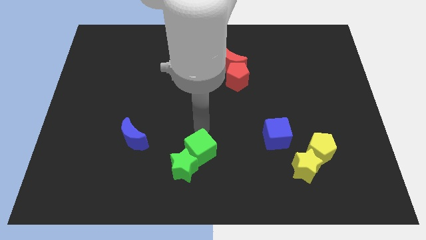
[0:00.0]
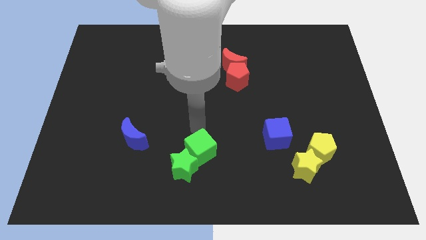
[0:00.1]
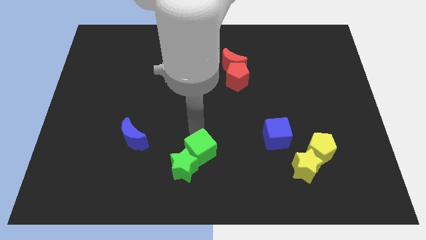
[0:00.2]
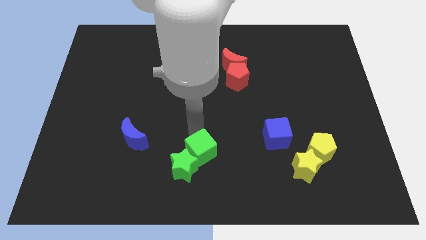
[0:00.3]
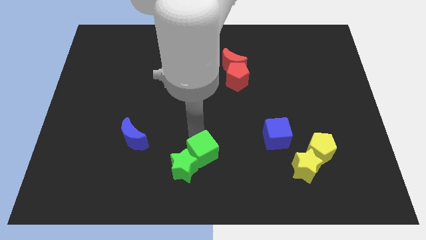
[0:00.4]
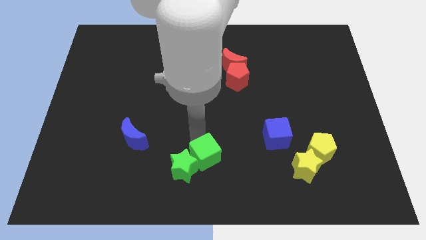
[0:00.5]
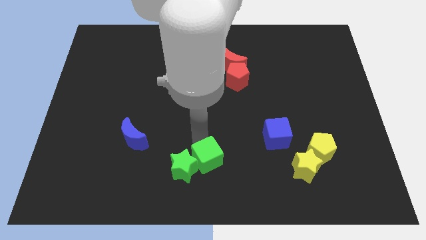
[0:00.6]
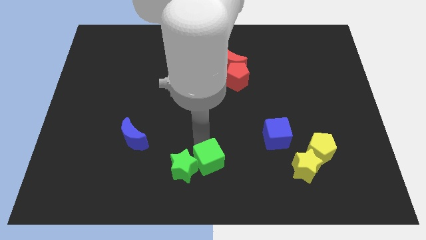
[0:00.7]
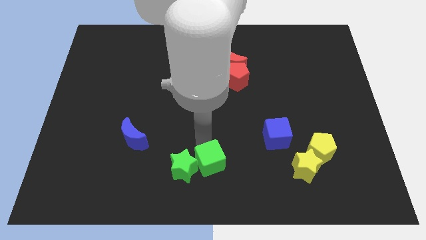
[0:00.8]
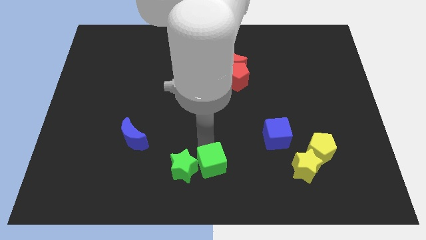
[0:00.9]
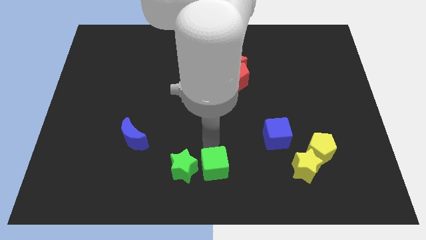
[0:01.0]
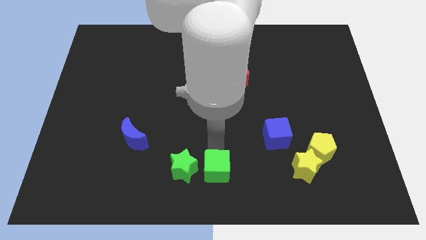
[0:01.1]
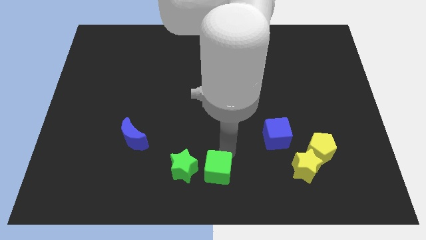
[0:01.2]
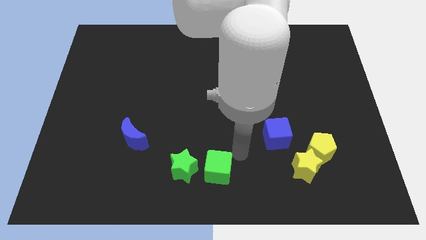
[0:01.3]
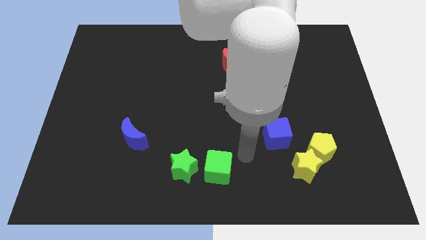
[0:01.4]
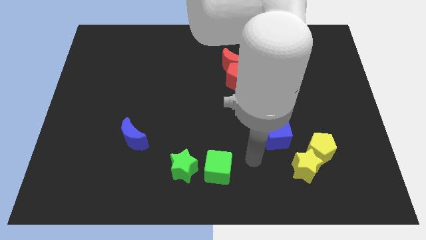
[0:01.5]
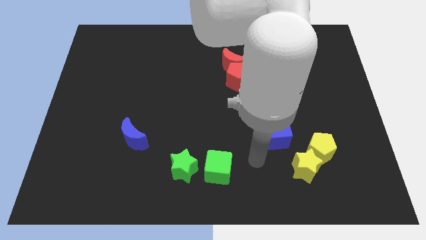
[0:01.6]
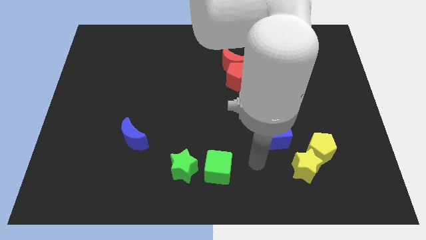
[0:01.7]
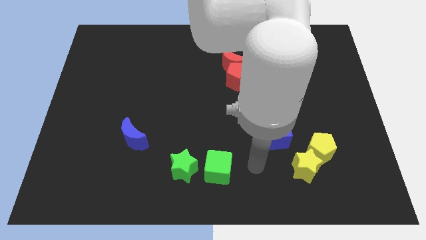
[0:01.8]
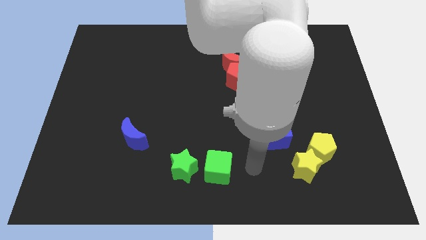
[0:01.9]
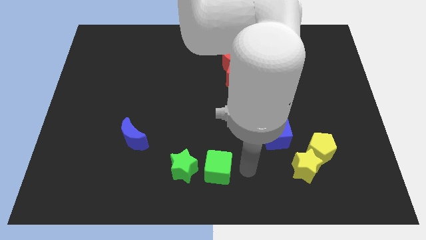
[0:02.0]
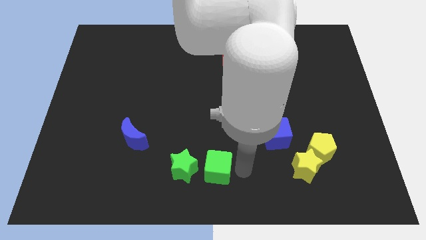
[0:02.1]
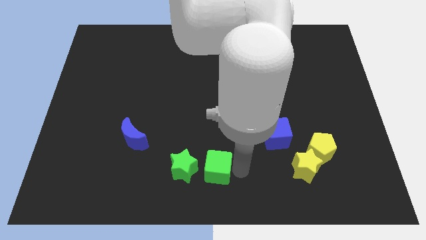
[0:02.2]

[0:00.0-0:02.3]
place the green cube to the right of the green star

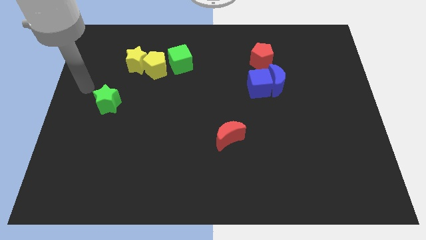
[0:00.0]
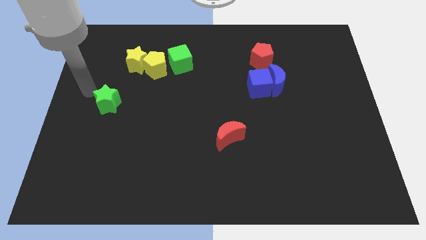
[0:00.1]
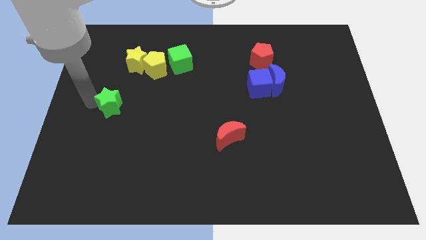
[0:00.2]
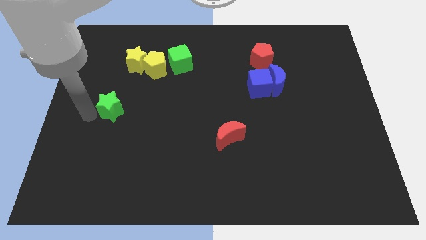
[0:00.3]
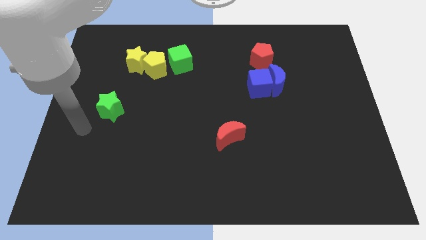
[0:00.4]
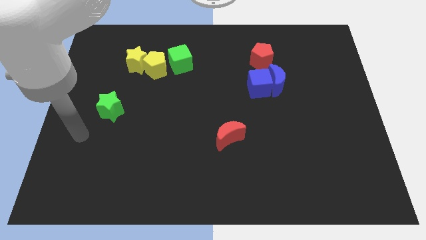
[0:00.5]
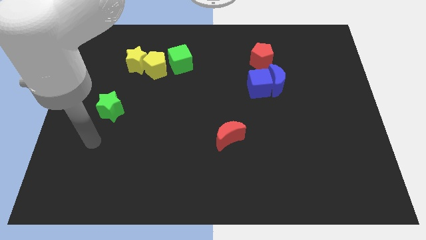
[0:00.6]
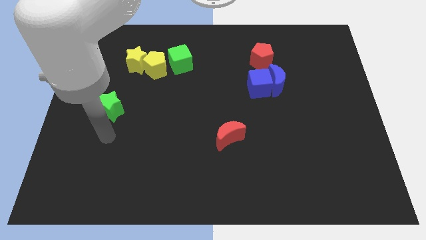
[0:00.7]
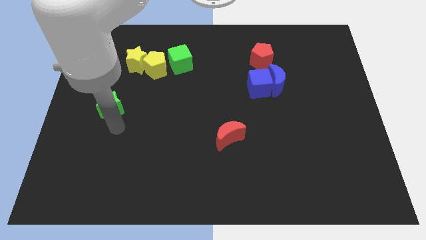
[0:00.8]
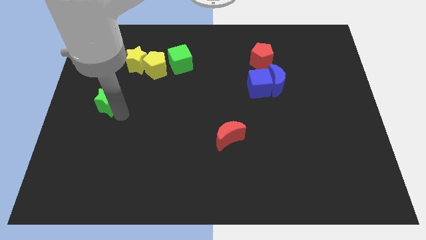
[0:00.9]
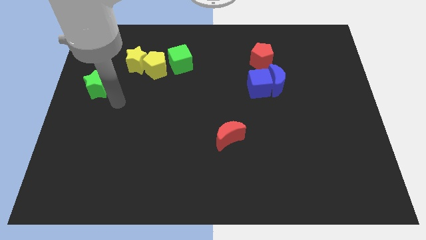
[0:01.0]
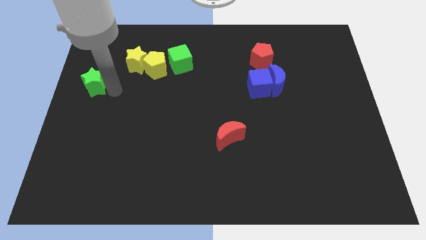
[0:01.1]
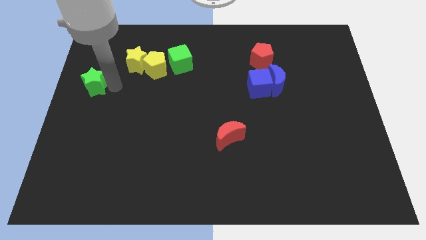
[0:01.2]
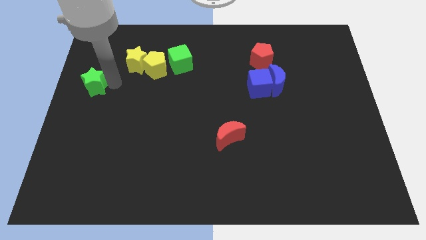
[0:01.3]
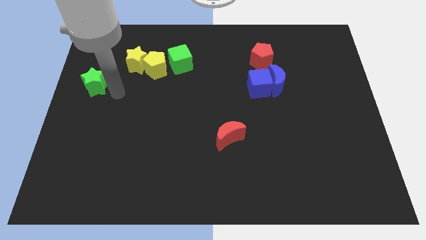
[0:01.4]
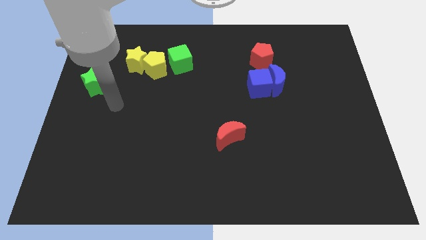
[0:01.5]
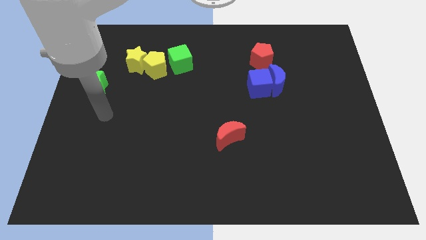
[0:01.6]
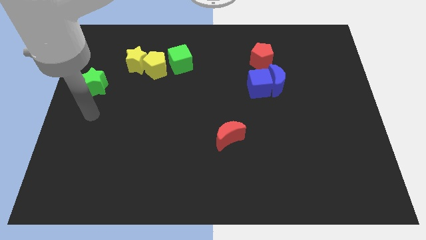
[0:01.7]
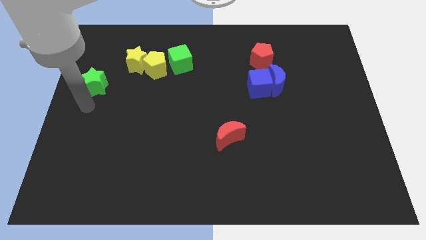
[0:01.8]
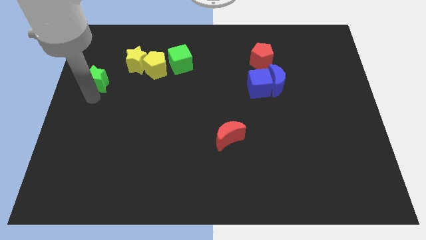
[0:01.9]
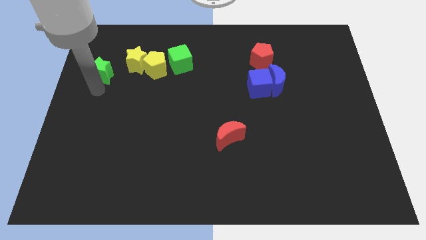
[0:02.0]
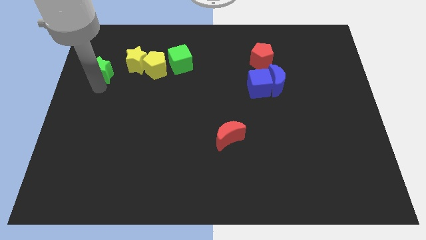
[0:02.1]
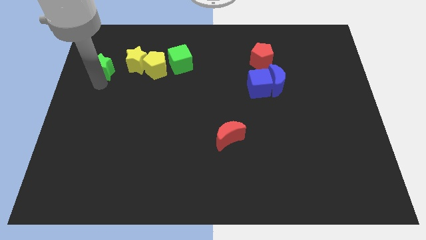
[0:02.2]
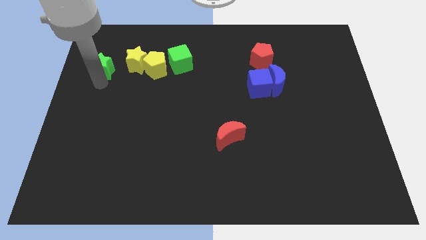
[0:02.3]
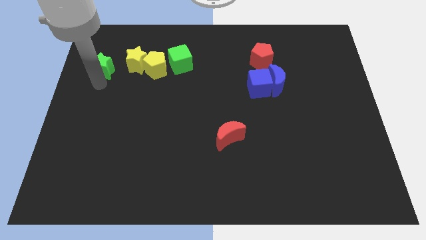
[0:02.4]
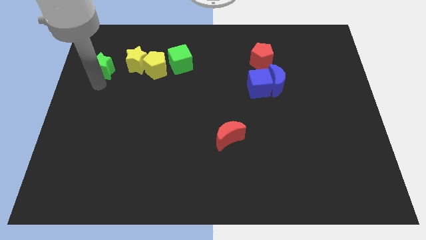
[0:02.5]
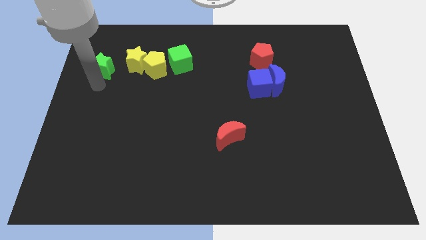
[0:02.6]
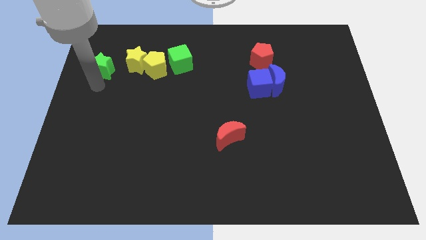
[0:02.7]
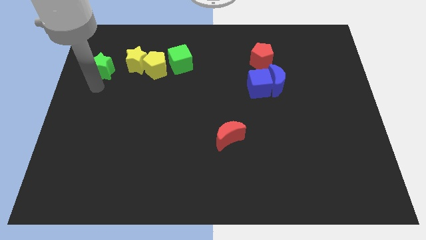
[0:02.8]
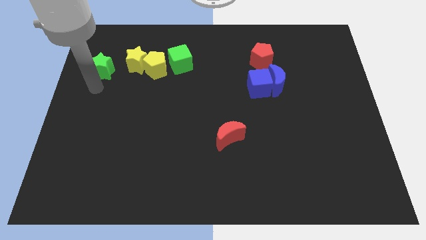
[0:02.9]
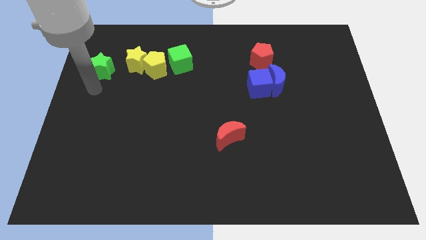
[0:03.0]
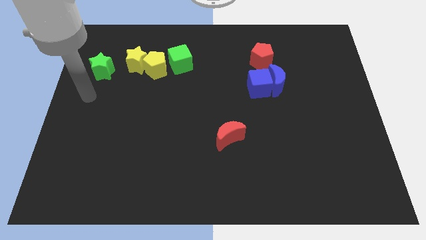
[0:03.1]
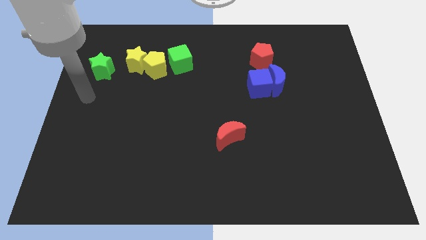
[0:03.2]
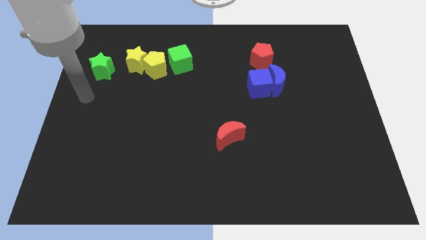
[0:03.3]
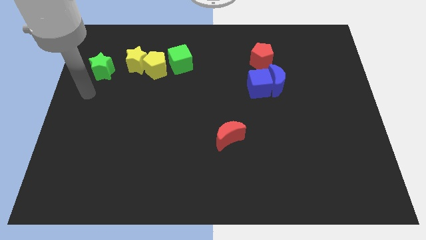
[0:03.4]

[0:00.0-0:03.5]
push the green star to the left of the yellow star

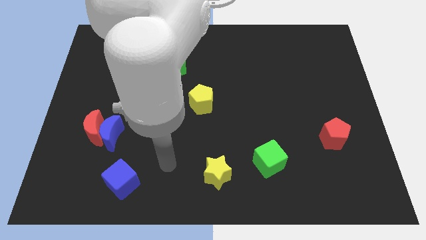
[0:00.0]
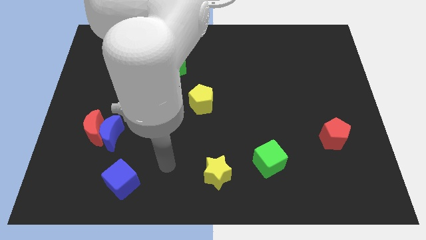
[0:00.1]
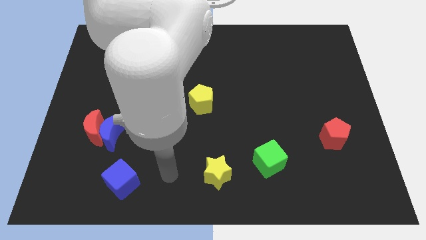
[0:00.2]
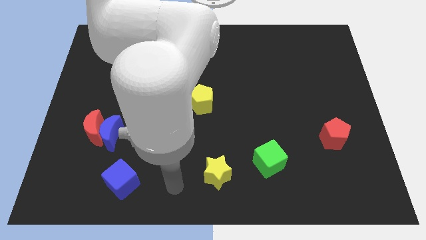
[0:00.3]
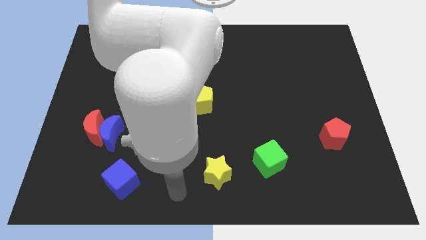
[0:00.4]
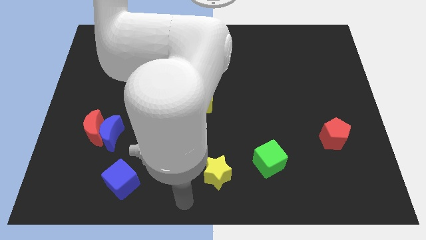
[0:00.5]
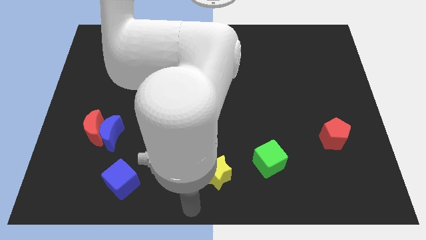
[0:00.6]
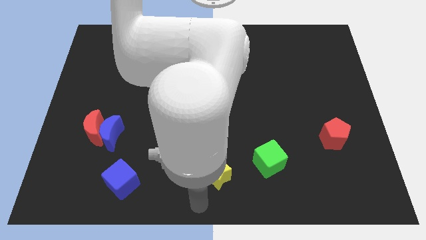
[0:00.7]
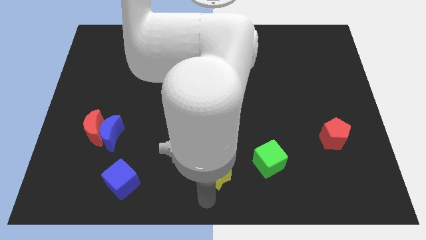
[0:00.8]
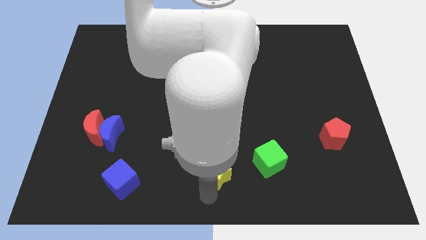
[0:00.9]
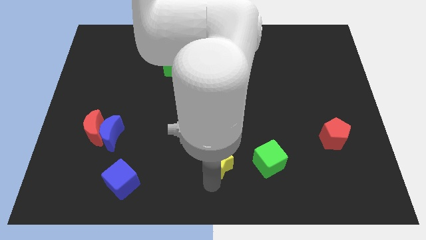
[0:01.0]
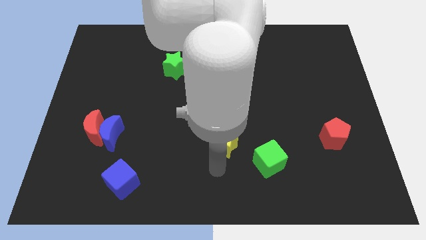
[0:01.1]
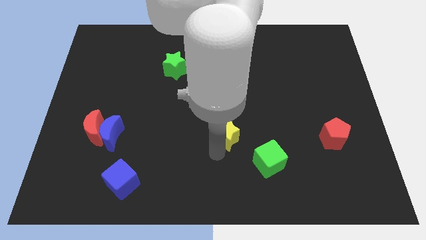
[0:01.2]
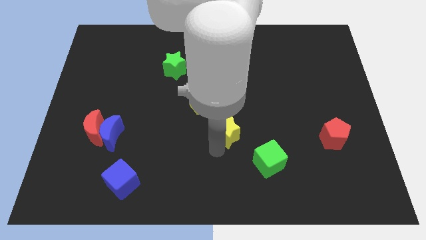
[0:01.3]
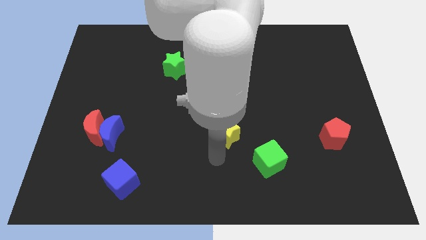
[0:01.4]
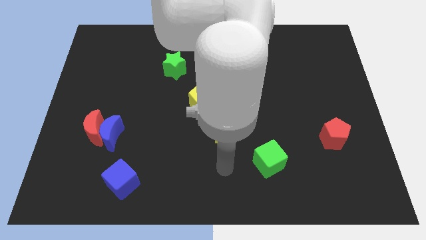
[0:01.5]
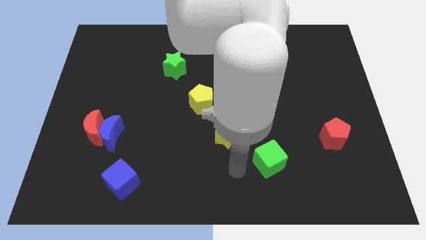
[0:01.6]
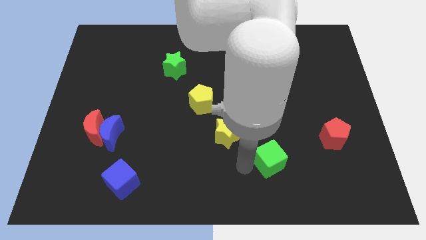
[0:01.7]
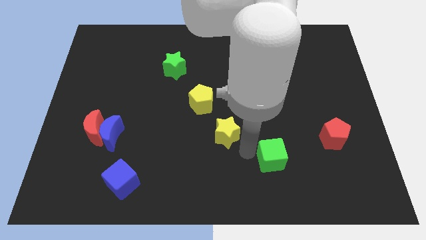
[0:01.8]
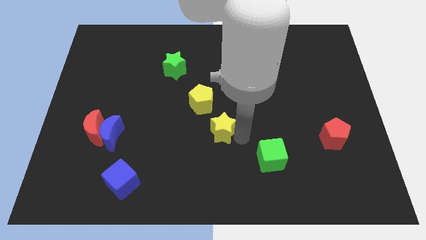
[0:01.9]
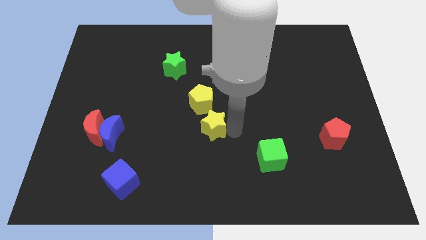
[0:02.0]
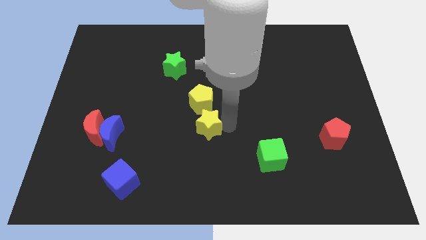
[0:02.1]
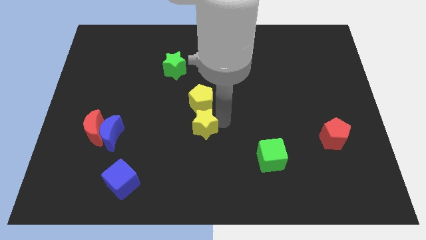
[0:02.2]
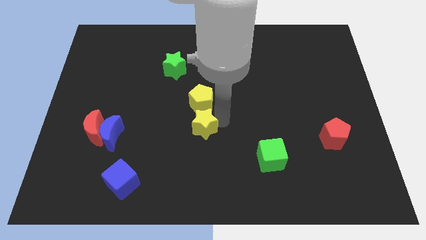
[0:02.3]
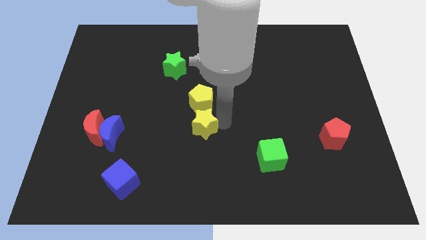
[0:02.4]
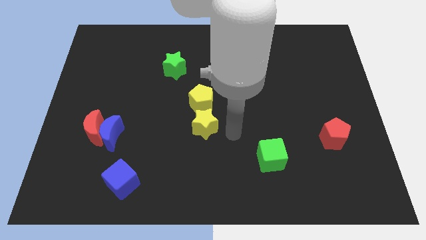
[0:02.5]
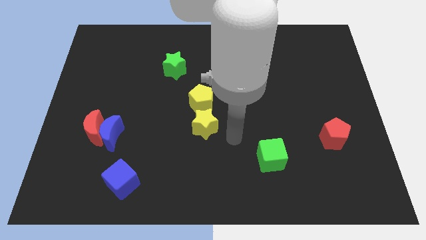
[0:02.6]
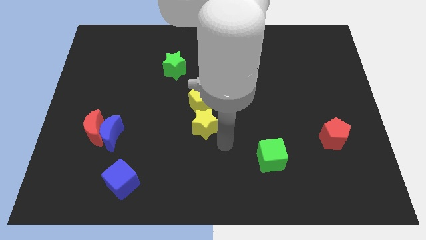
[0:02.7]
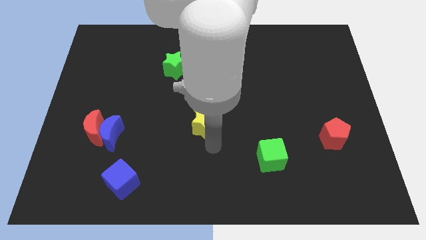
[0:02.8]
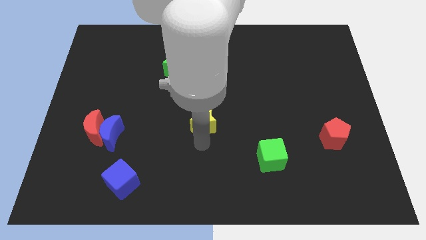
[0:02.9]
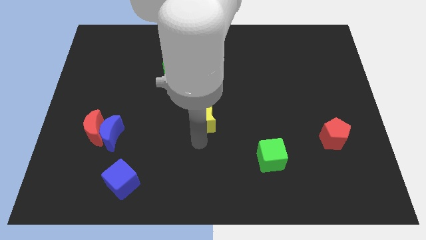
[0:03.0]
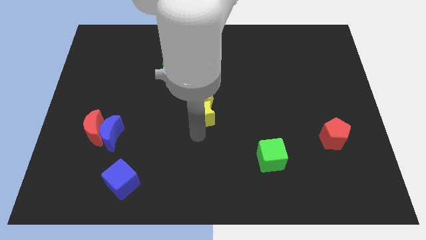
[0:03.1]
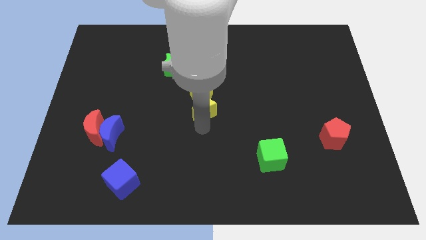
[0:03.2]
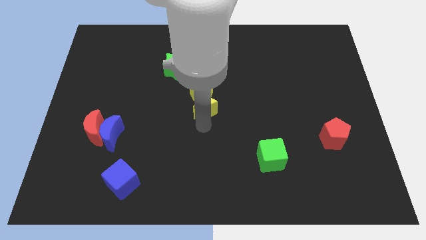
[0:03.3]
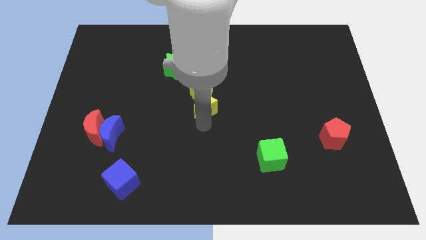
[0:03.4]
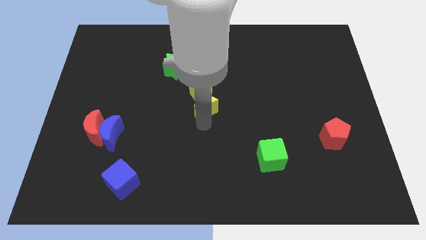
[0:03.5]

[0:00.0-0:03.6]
move the yellow star into the bottom of the yellow pentagon
